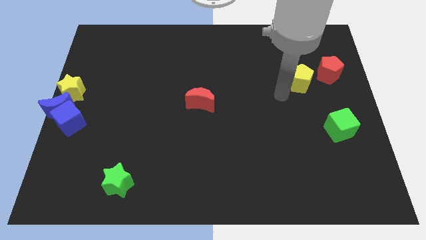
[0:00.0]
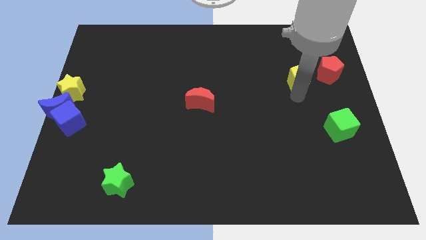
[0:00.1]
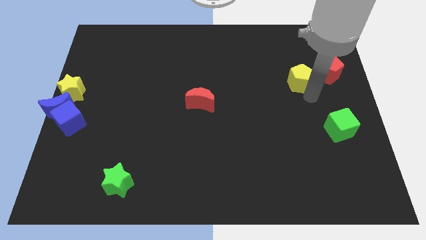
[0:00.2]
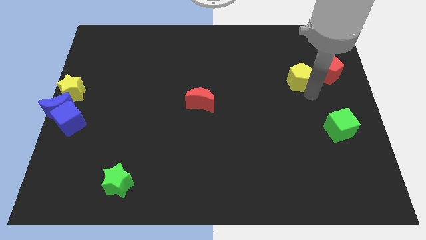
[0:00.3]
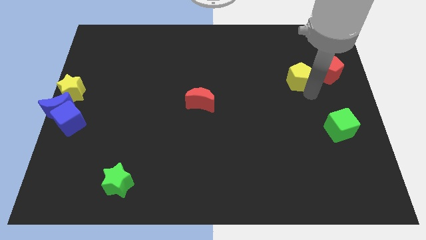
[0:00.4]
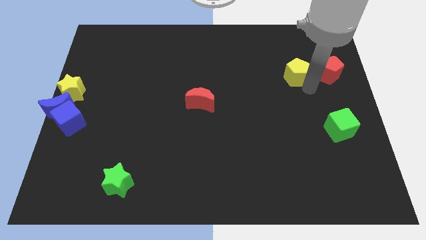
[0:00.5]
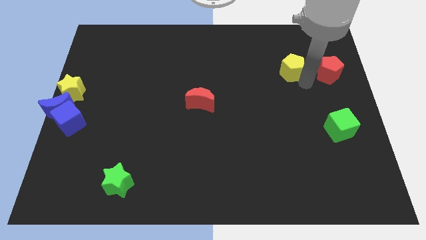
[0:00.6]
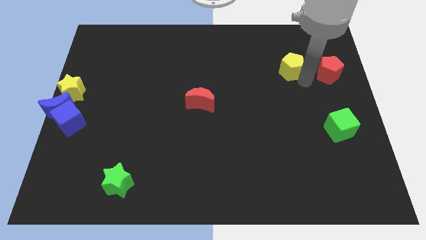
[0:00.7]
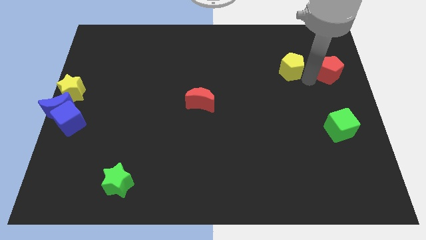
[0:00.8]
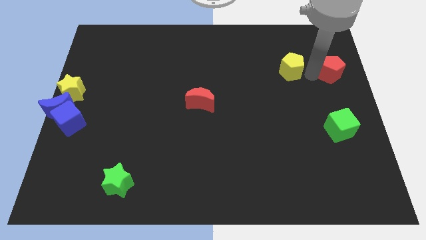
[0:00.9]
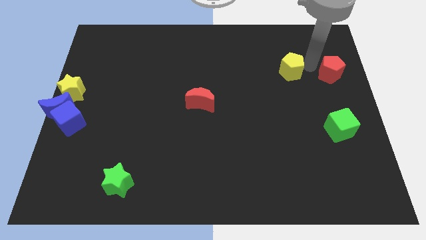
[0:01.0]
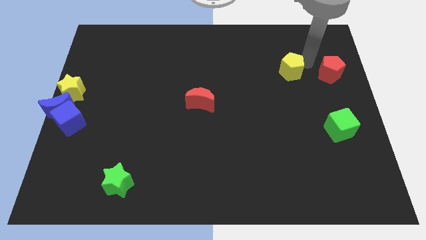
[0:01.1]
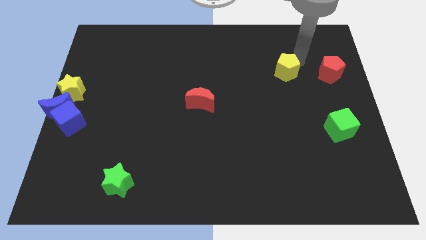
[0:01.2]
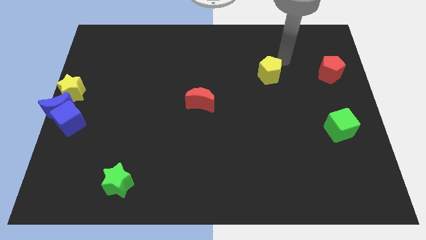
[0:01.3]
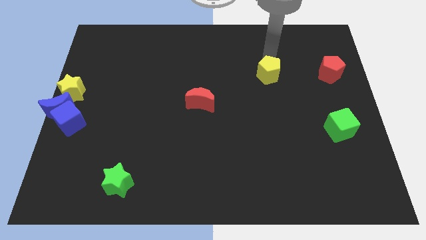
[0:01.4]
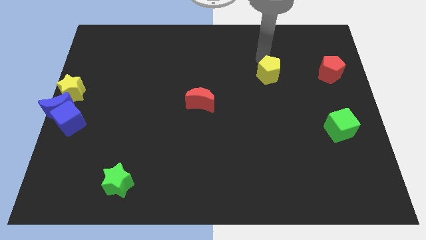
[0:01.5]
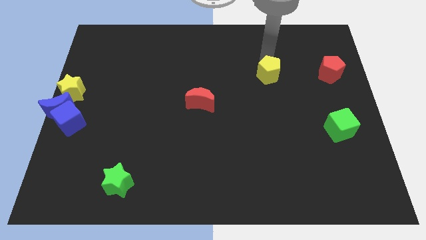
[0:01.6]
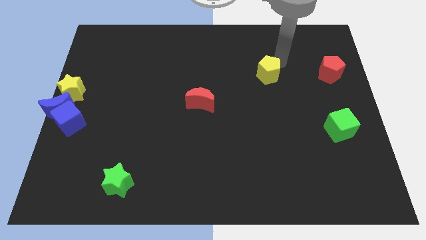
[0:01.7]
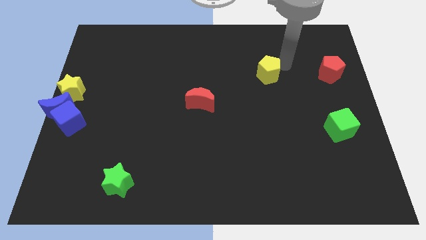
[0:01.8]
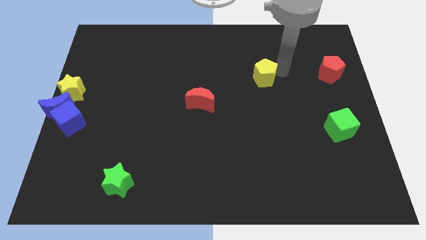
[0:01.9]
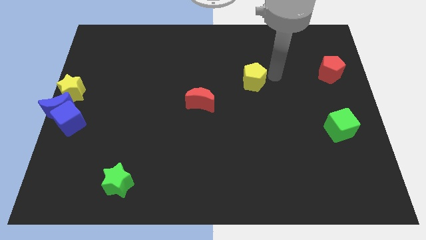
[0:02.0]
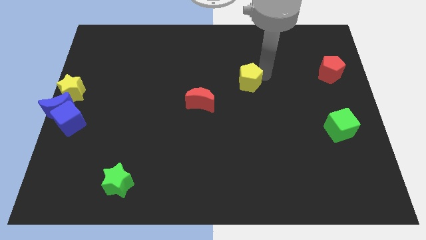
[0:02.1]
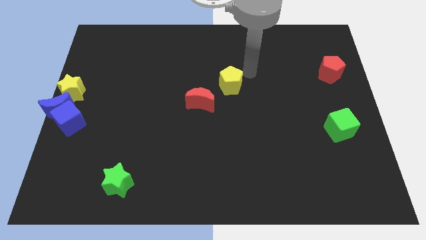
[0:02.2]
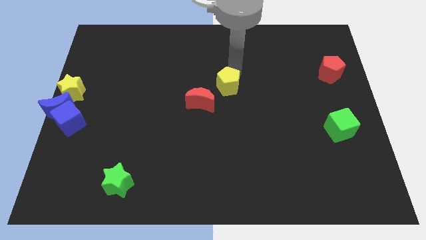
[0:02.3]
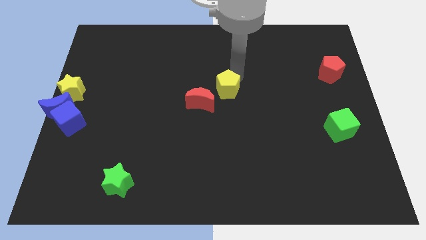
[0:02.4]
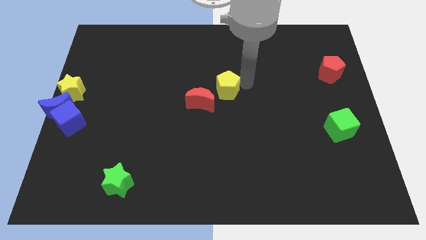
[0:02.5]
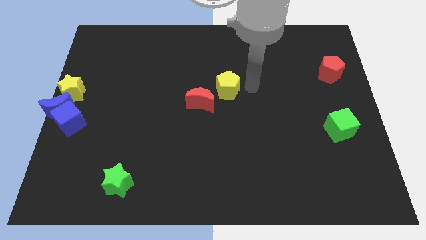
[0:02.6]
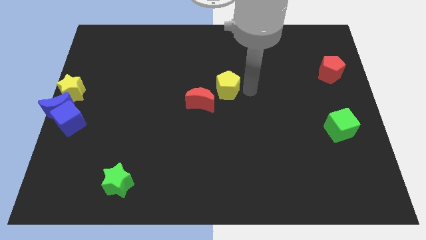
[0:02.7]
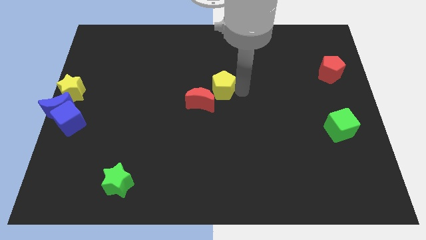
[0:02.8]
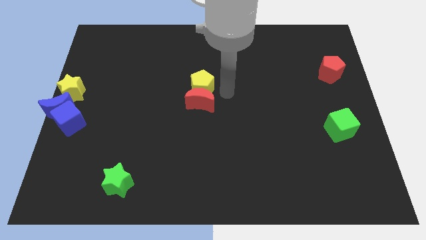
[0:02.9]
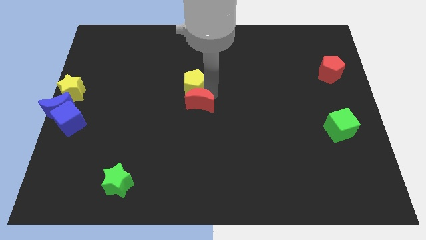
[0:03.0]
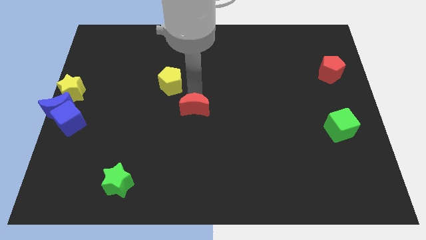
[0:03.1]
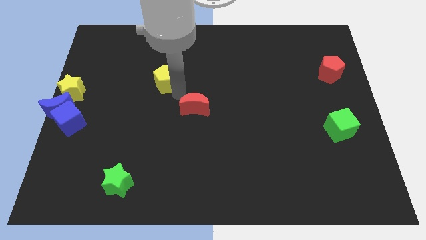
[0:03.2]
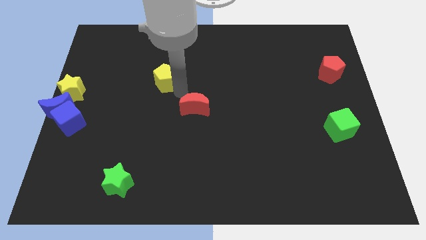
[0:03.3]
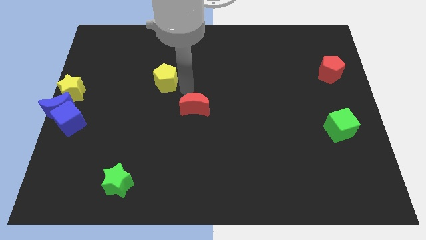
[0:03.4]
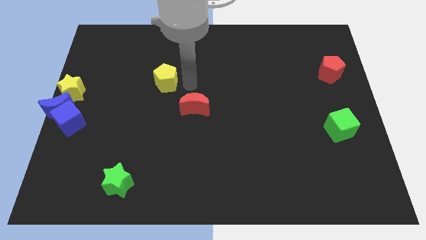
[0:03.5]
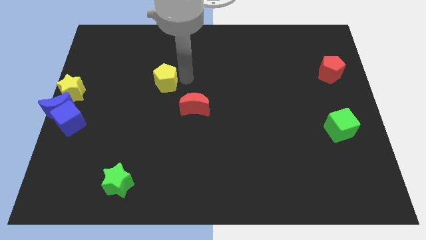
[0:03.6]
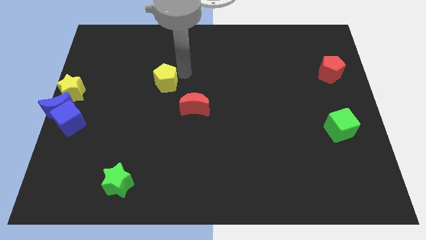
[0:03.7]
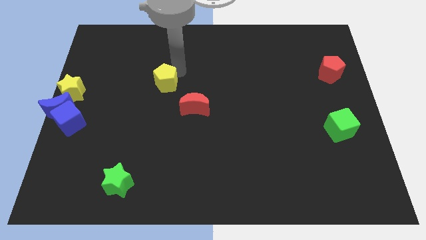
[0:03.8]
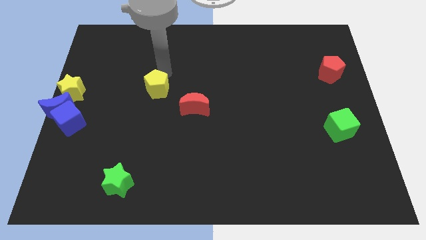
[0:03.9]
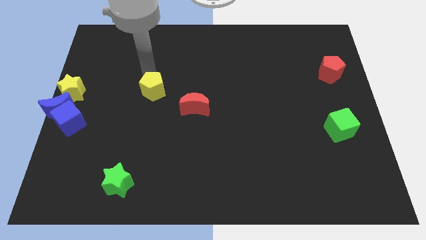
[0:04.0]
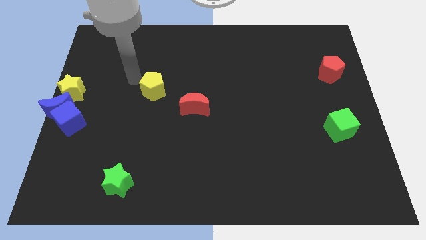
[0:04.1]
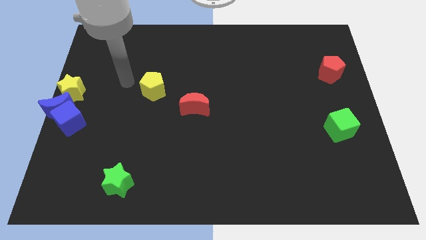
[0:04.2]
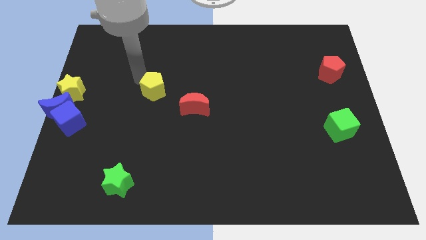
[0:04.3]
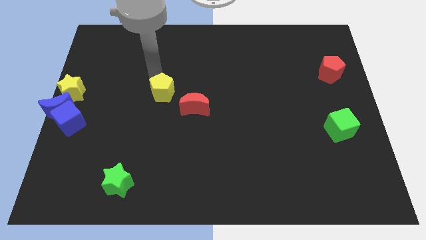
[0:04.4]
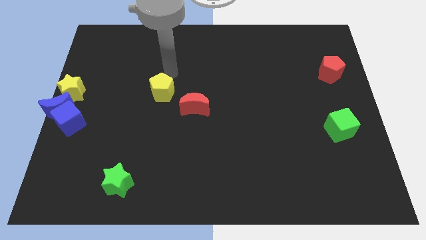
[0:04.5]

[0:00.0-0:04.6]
move yellow pentagon closer to the red crescent

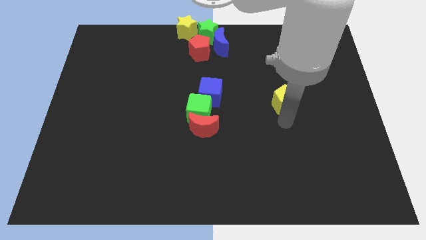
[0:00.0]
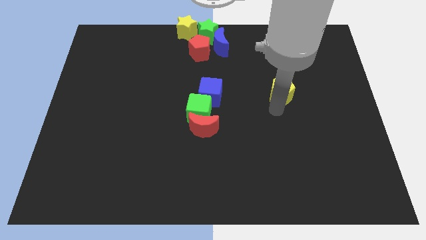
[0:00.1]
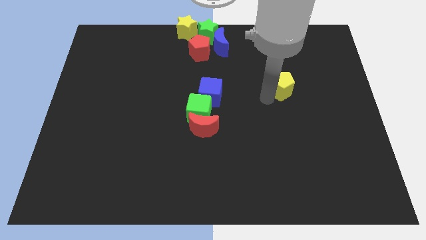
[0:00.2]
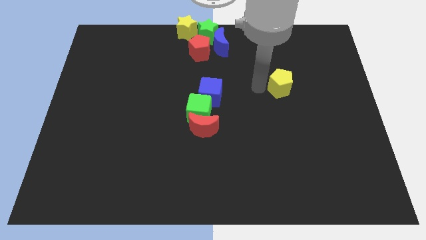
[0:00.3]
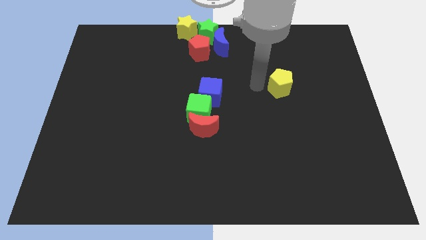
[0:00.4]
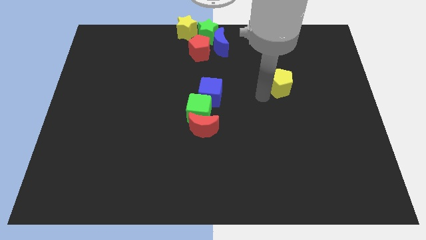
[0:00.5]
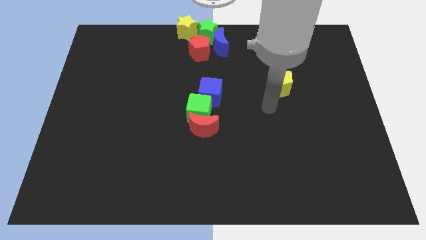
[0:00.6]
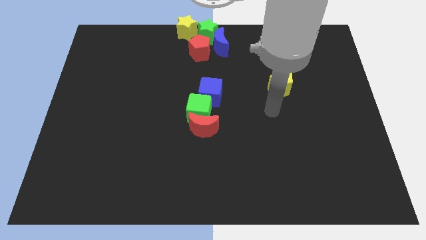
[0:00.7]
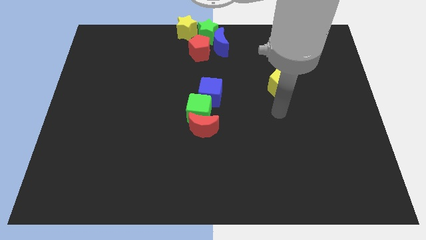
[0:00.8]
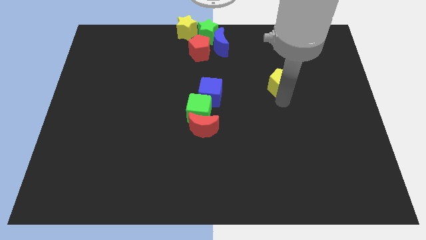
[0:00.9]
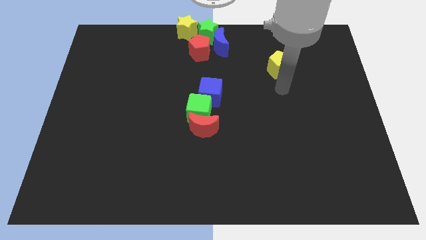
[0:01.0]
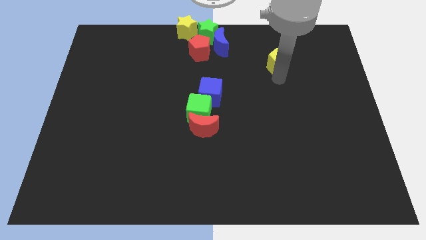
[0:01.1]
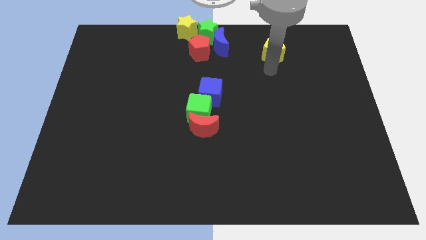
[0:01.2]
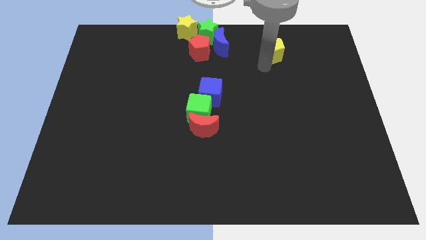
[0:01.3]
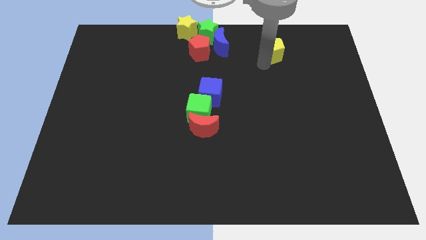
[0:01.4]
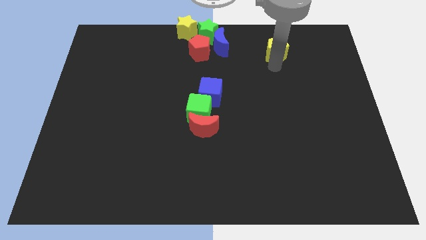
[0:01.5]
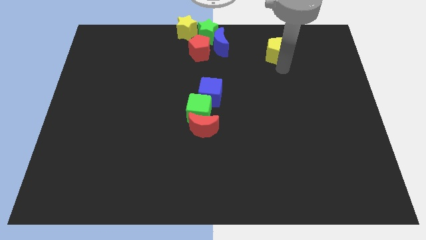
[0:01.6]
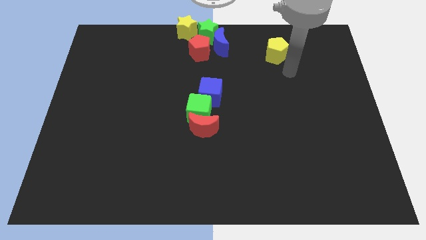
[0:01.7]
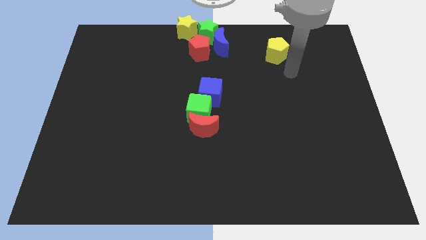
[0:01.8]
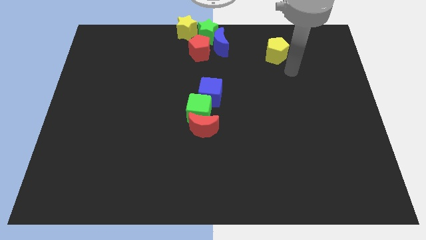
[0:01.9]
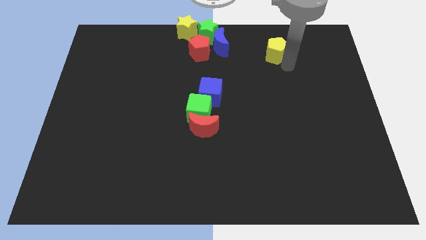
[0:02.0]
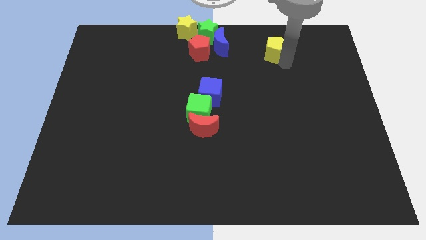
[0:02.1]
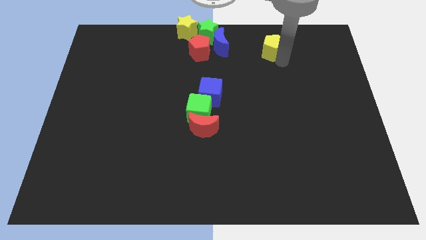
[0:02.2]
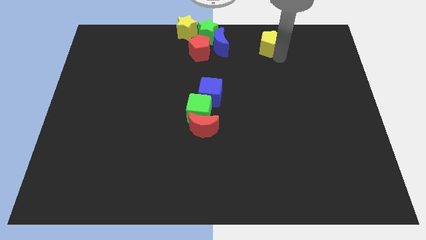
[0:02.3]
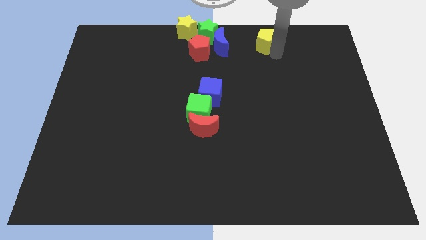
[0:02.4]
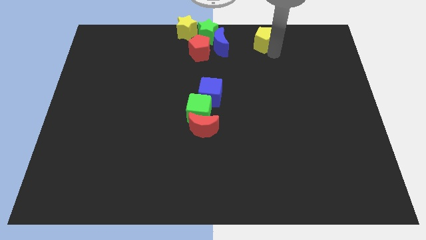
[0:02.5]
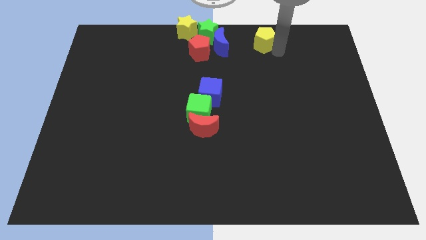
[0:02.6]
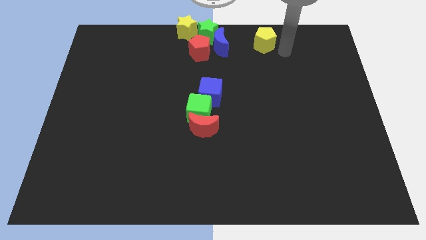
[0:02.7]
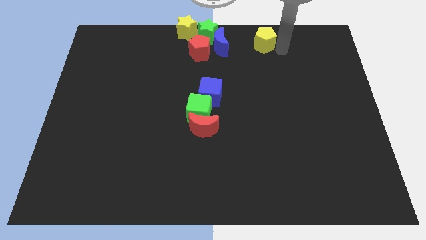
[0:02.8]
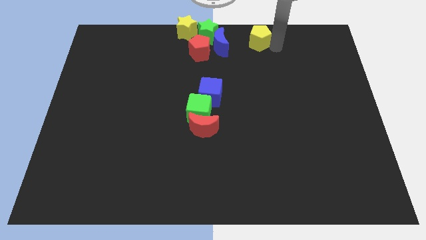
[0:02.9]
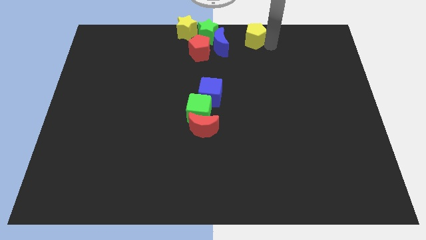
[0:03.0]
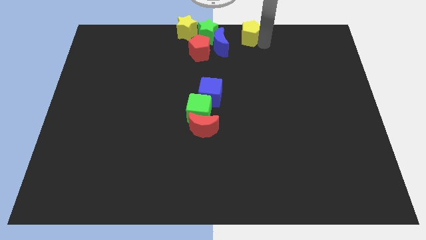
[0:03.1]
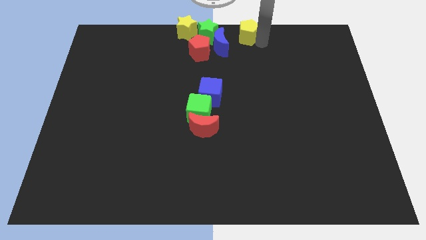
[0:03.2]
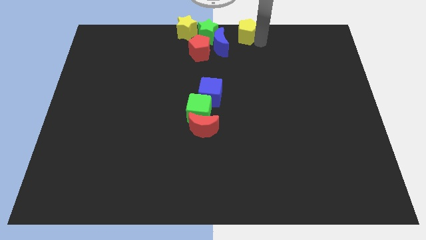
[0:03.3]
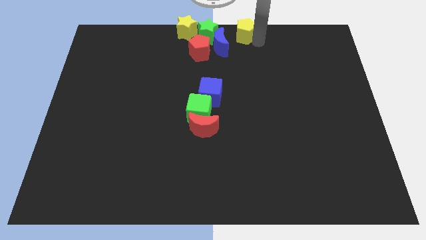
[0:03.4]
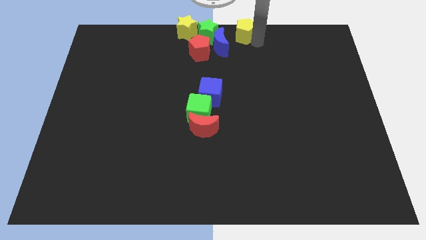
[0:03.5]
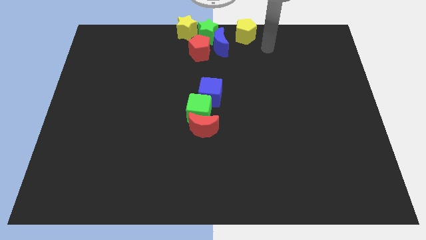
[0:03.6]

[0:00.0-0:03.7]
move the yellow pentagon at the top center

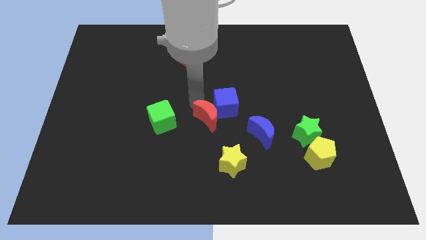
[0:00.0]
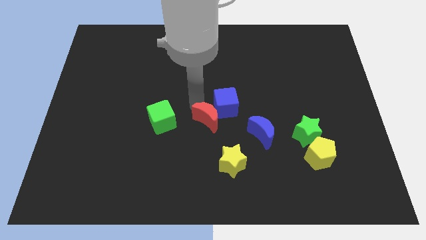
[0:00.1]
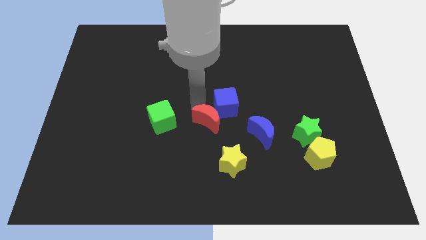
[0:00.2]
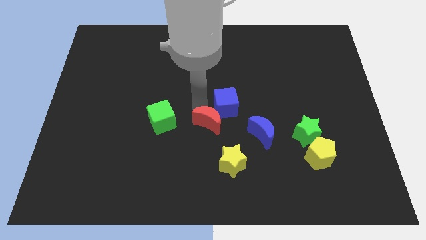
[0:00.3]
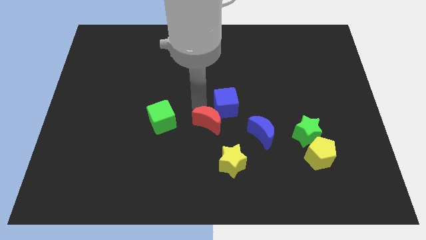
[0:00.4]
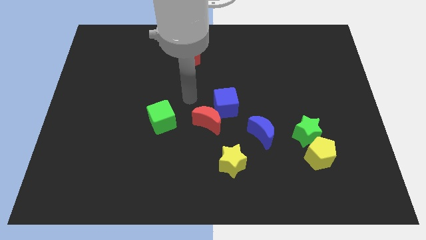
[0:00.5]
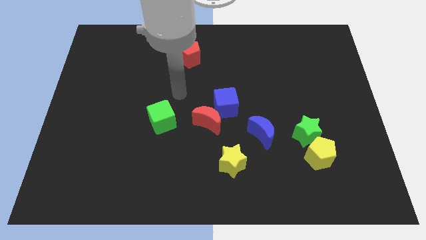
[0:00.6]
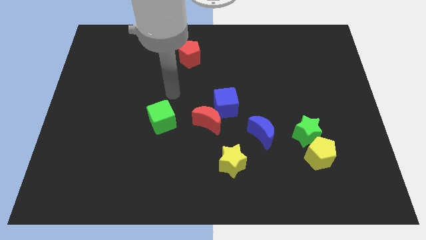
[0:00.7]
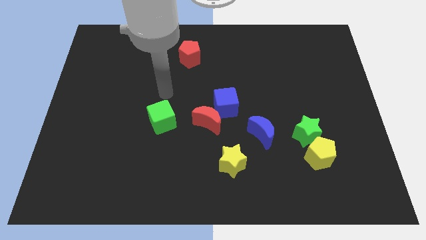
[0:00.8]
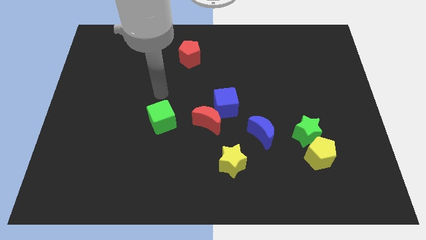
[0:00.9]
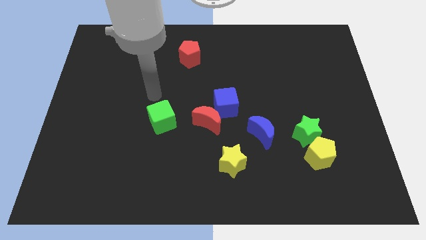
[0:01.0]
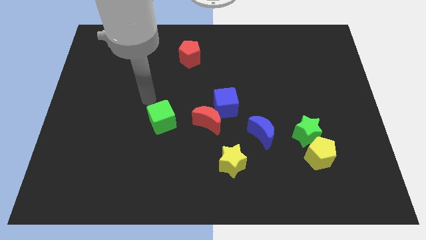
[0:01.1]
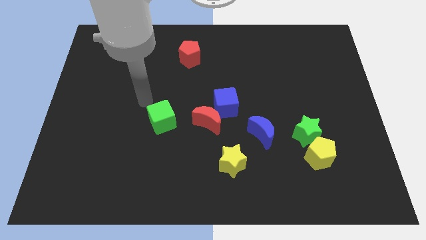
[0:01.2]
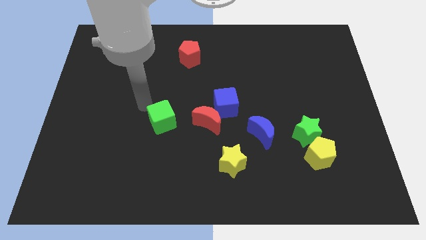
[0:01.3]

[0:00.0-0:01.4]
move your arm away from red moon
